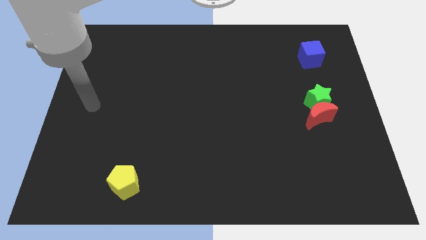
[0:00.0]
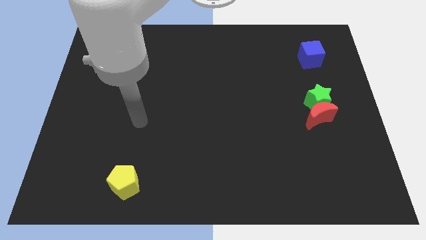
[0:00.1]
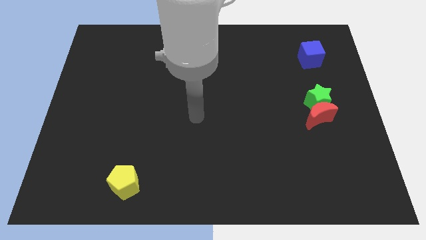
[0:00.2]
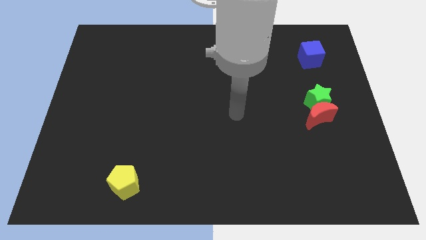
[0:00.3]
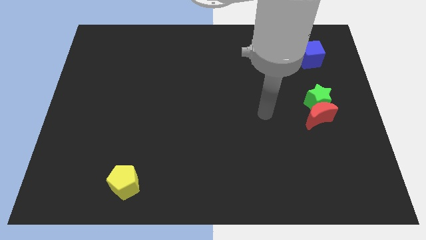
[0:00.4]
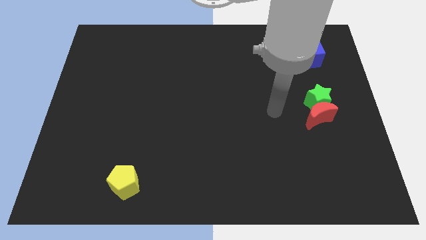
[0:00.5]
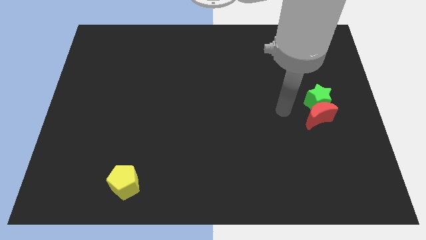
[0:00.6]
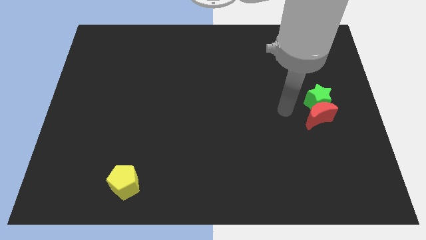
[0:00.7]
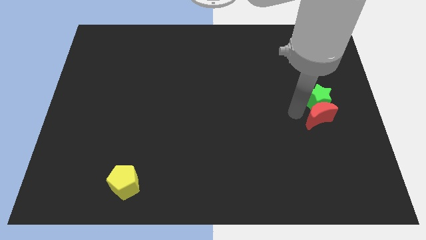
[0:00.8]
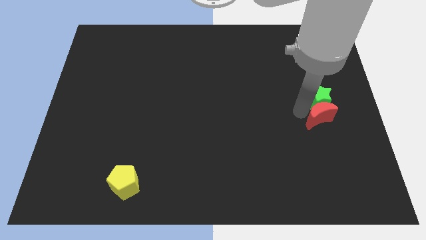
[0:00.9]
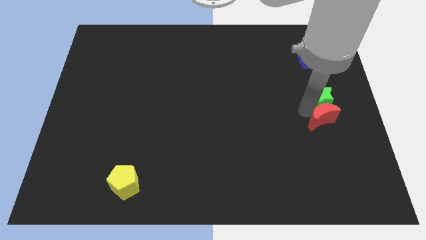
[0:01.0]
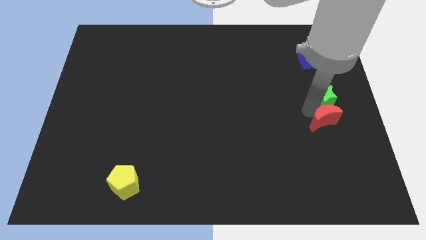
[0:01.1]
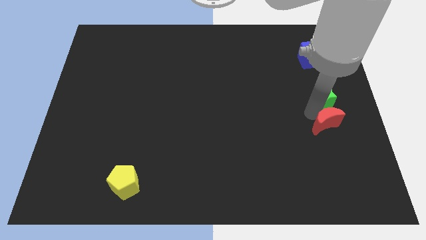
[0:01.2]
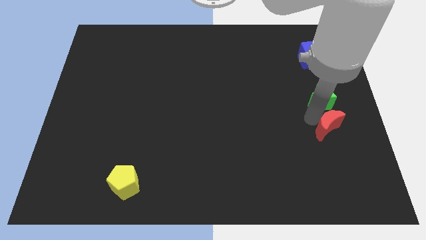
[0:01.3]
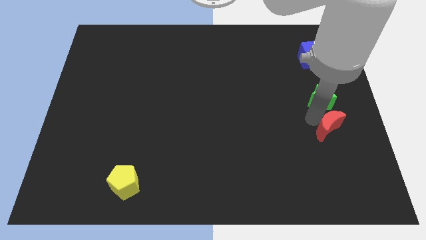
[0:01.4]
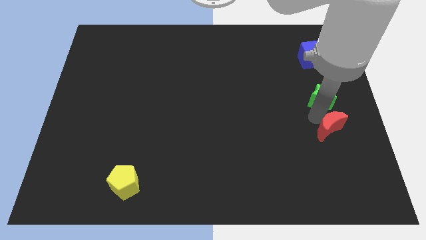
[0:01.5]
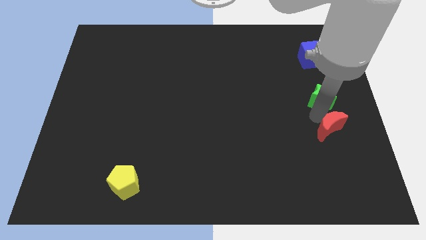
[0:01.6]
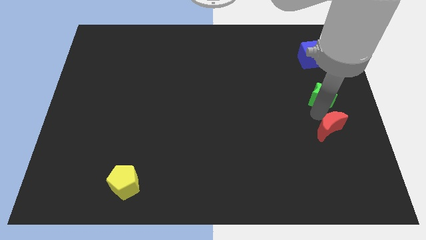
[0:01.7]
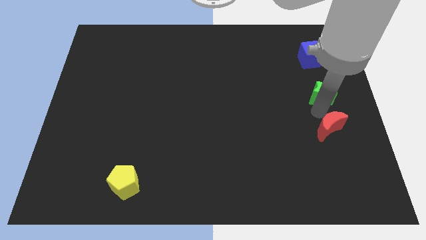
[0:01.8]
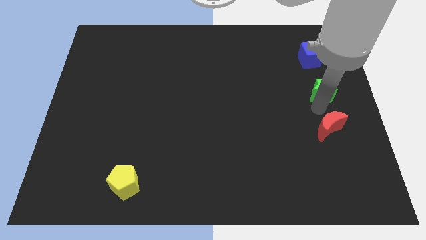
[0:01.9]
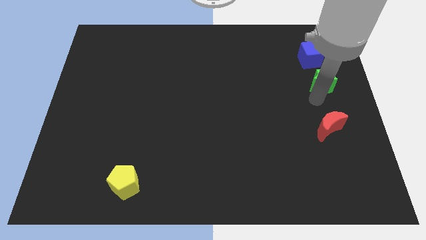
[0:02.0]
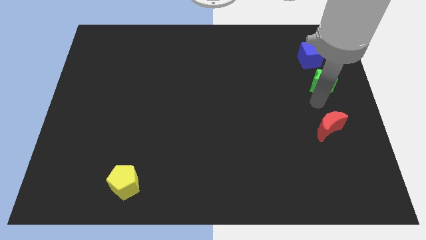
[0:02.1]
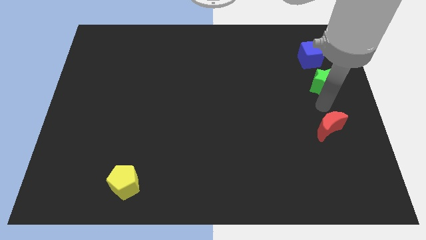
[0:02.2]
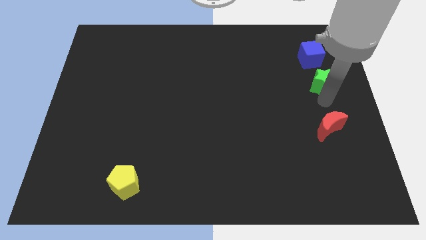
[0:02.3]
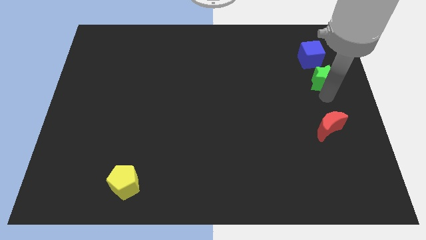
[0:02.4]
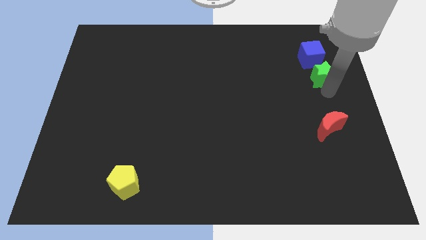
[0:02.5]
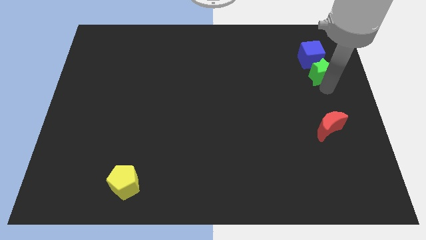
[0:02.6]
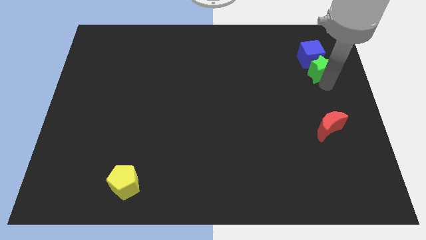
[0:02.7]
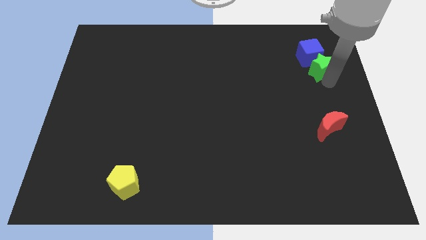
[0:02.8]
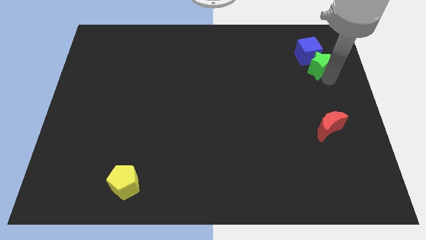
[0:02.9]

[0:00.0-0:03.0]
put the star close to the blue cube

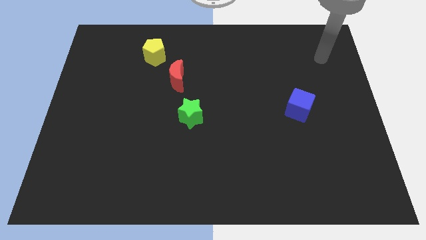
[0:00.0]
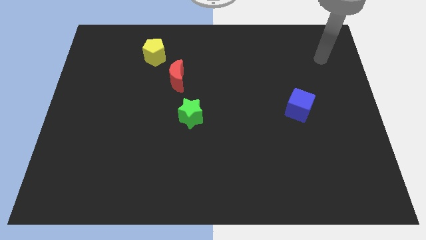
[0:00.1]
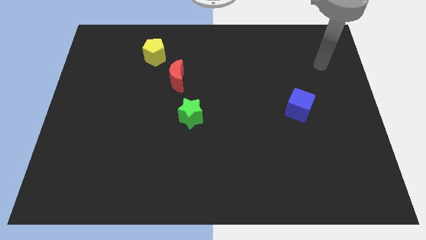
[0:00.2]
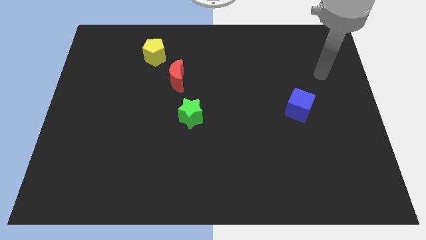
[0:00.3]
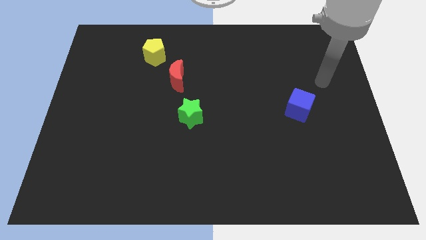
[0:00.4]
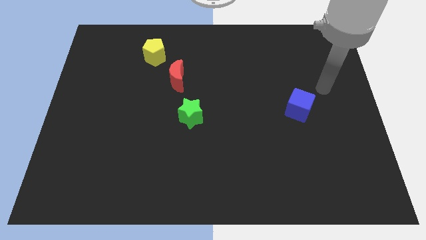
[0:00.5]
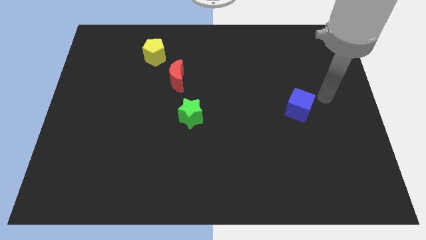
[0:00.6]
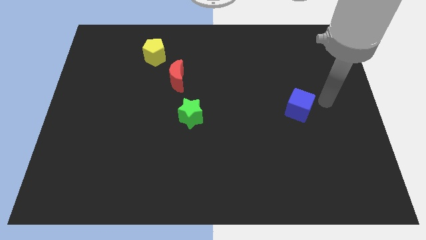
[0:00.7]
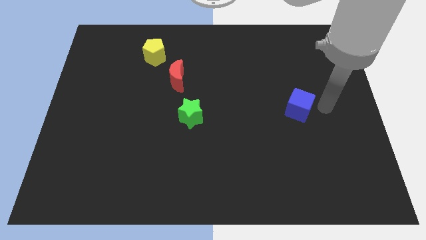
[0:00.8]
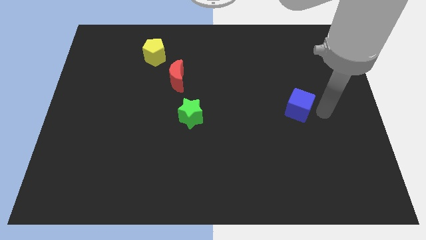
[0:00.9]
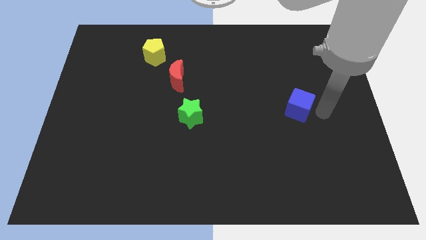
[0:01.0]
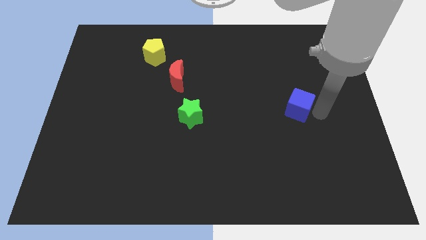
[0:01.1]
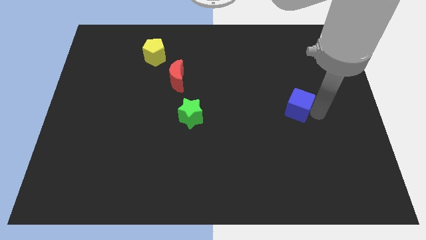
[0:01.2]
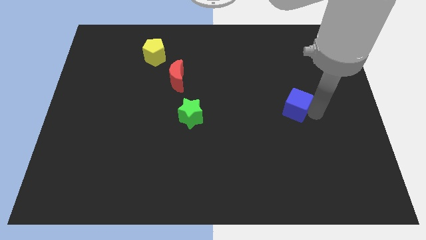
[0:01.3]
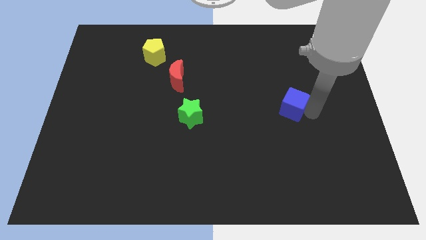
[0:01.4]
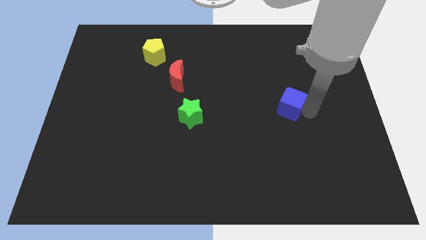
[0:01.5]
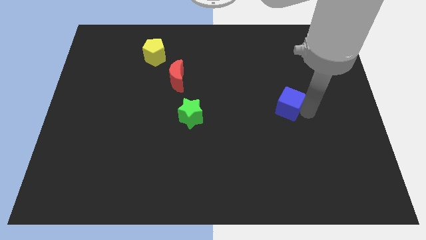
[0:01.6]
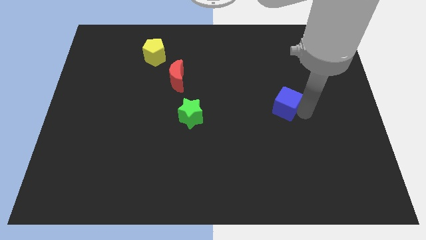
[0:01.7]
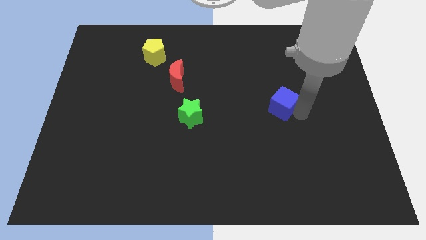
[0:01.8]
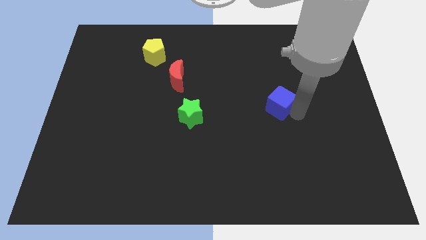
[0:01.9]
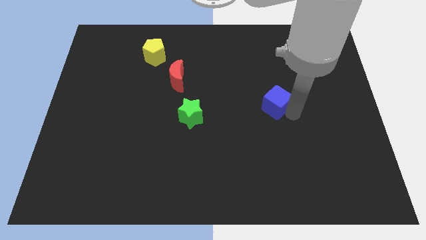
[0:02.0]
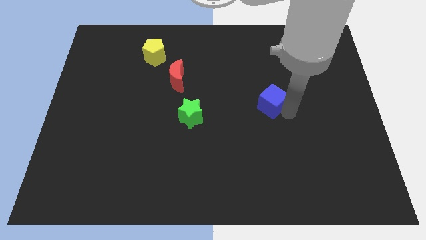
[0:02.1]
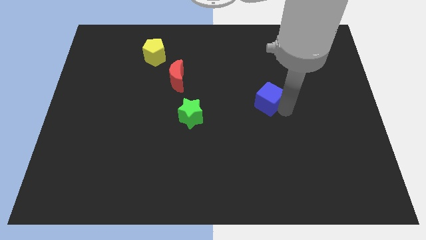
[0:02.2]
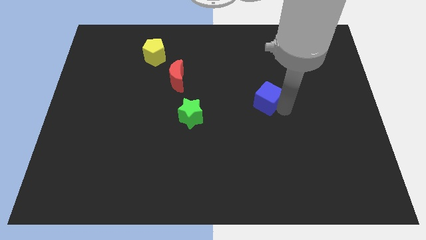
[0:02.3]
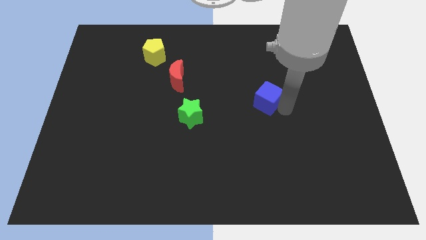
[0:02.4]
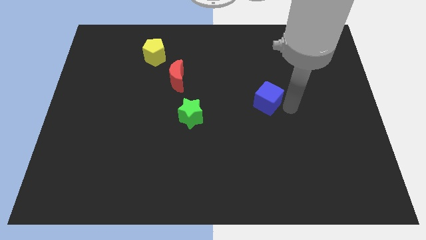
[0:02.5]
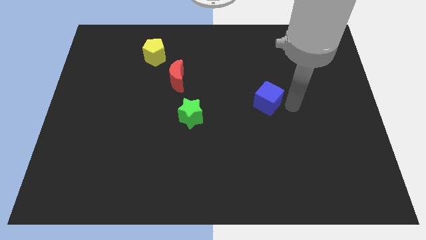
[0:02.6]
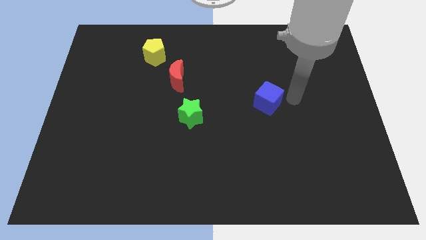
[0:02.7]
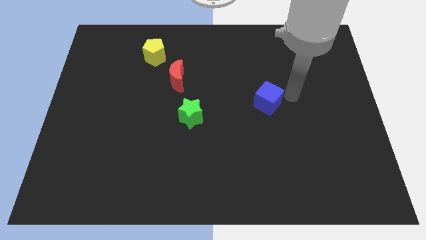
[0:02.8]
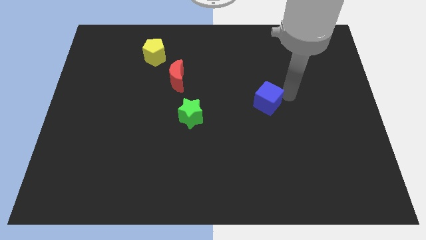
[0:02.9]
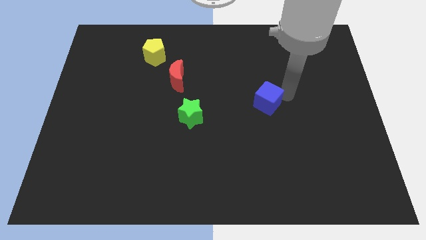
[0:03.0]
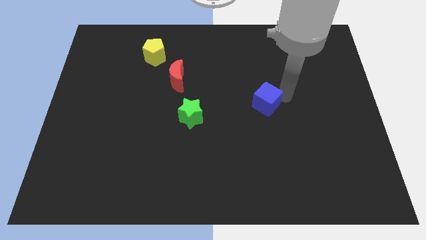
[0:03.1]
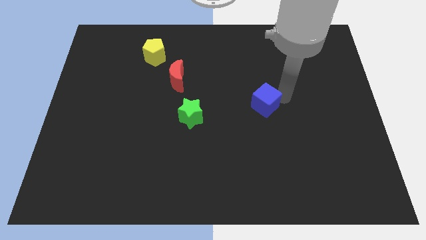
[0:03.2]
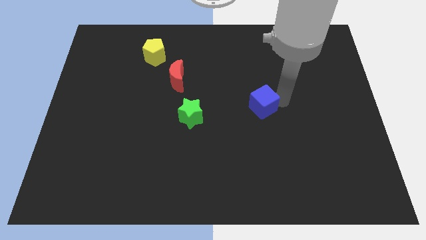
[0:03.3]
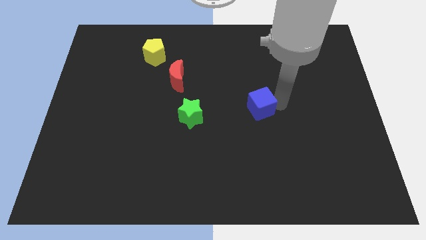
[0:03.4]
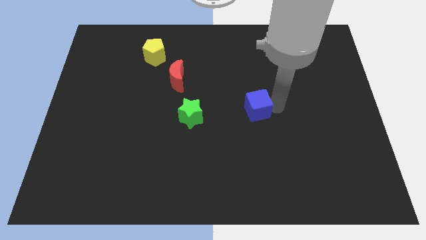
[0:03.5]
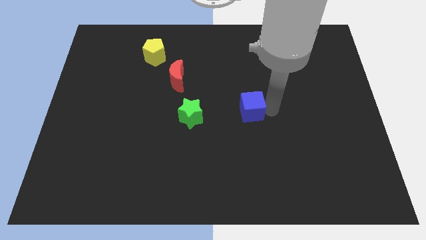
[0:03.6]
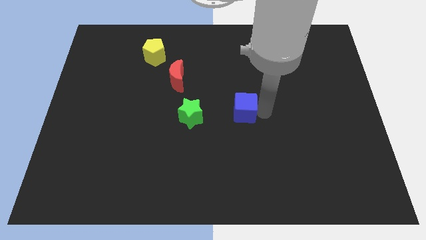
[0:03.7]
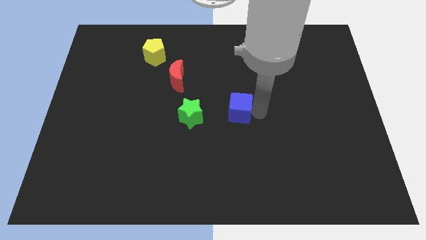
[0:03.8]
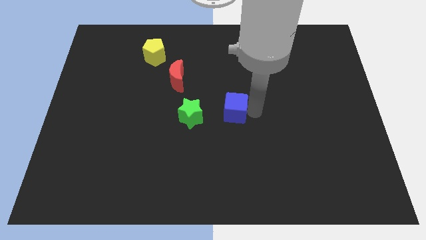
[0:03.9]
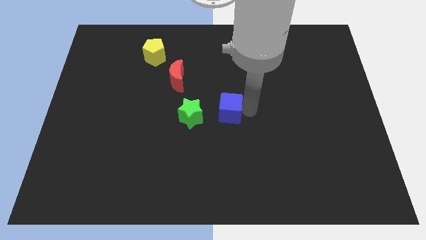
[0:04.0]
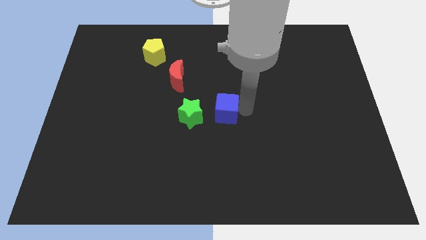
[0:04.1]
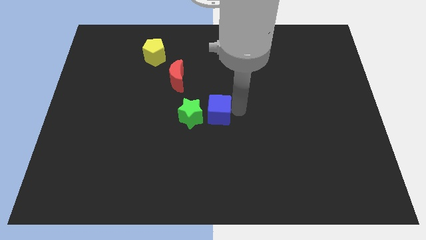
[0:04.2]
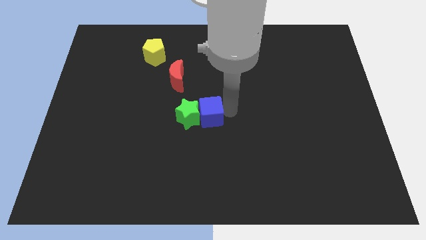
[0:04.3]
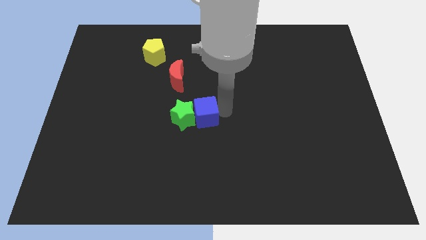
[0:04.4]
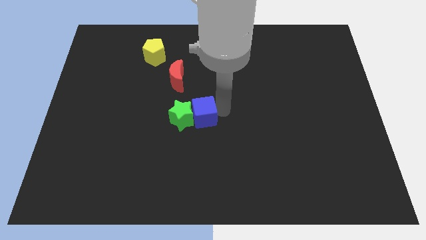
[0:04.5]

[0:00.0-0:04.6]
put the cube to the green star

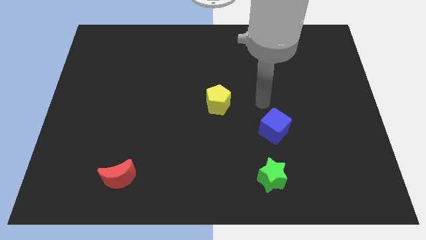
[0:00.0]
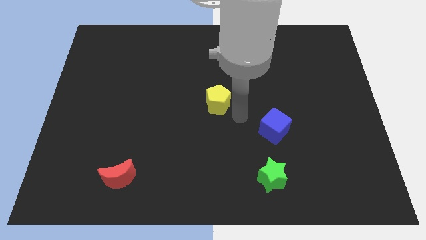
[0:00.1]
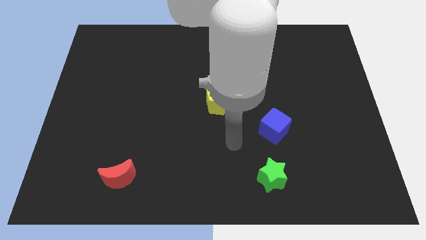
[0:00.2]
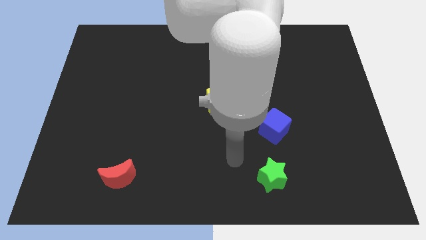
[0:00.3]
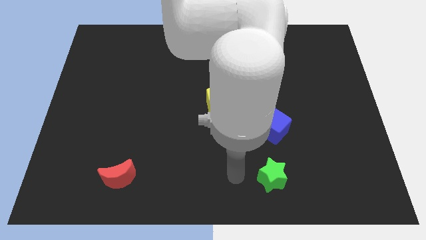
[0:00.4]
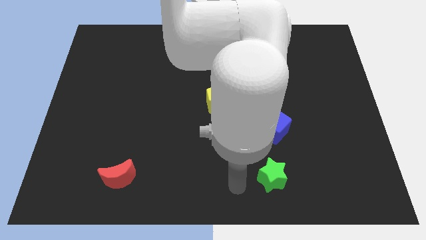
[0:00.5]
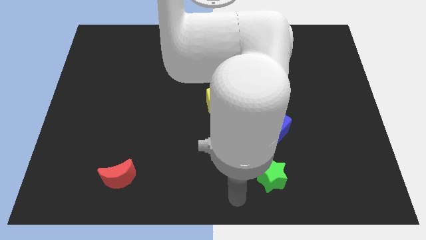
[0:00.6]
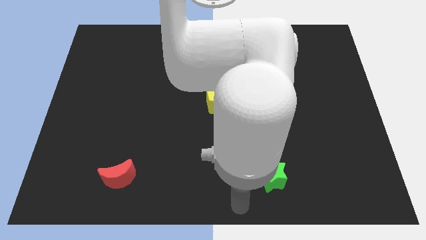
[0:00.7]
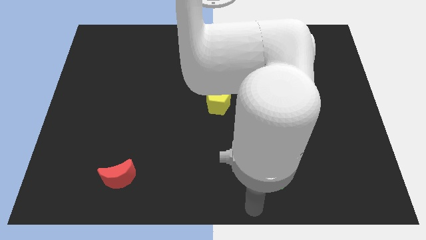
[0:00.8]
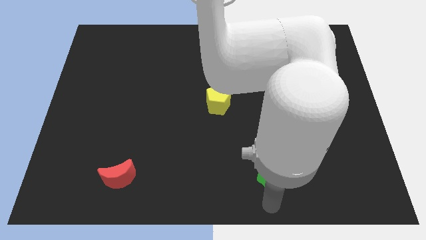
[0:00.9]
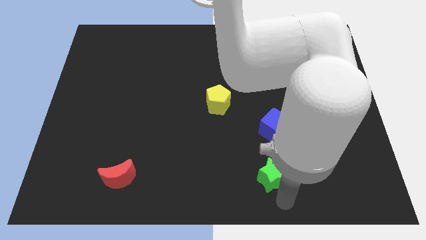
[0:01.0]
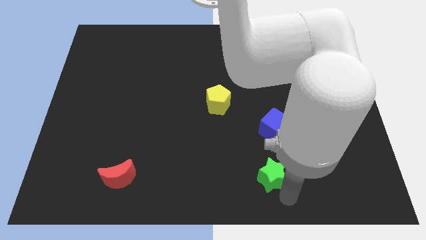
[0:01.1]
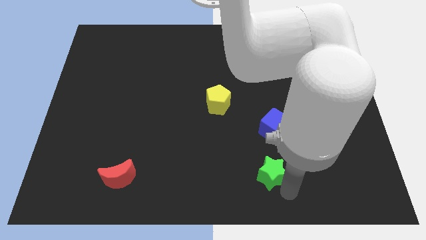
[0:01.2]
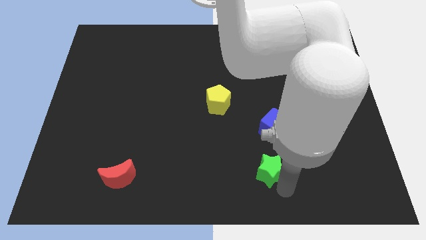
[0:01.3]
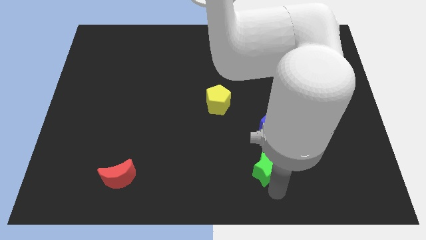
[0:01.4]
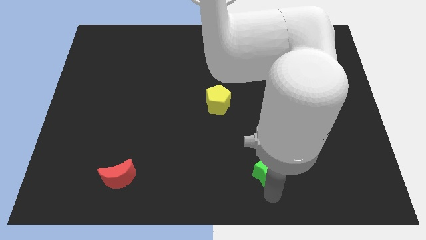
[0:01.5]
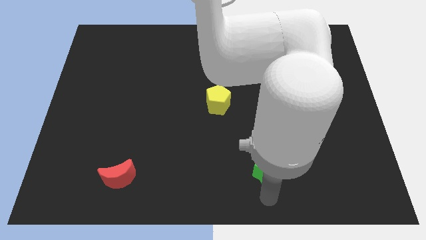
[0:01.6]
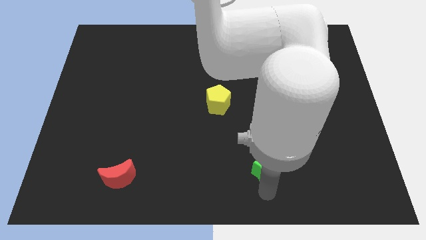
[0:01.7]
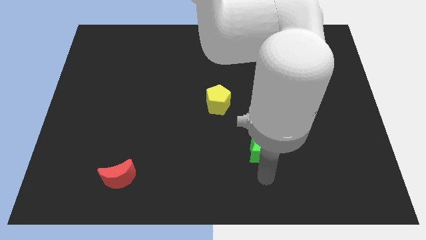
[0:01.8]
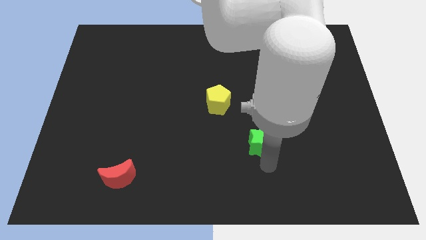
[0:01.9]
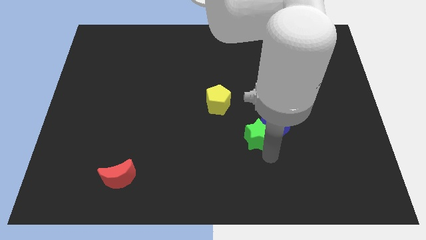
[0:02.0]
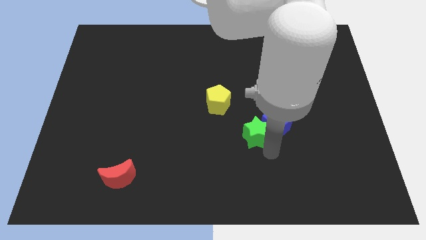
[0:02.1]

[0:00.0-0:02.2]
slide the star next to the blue block
